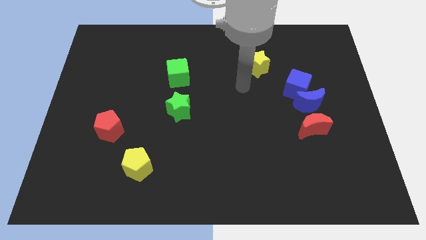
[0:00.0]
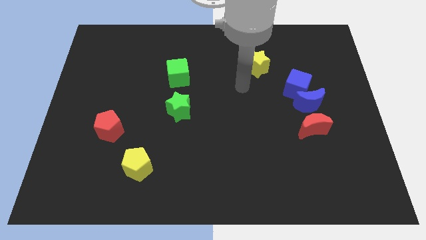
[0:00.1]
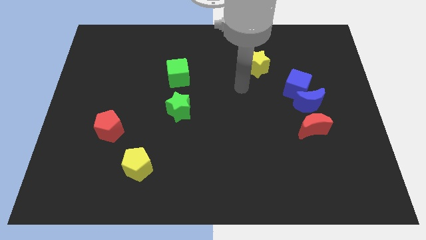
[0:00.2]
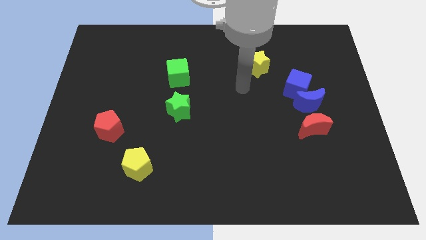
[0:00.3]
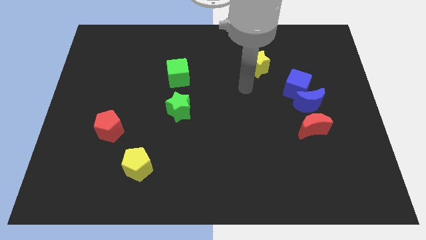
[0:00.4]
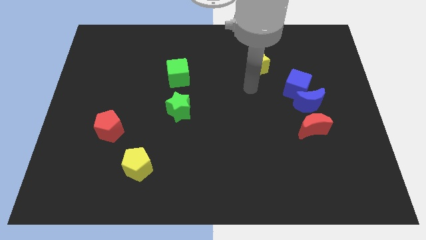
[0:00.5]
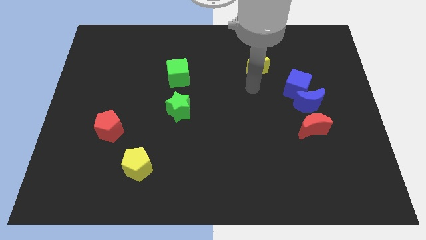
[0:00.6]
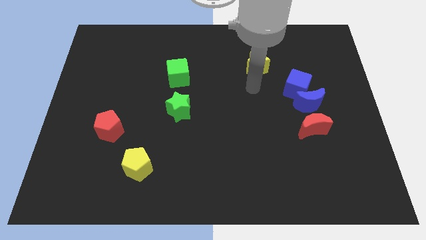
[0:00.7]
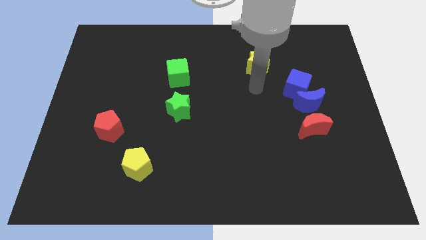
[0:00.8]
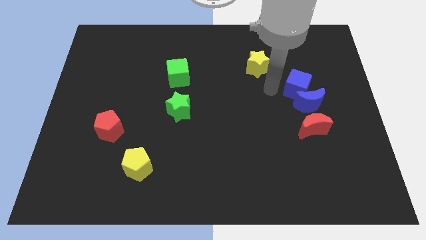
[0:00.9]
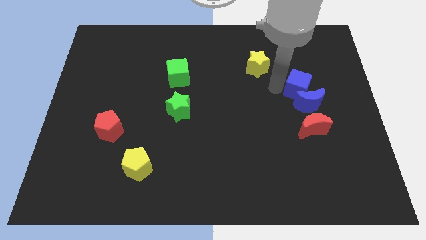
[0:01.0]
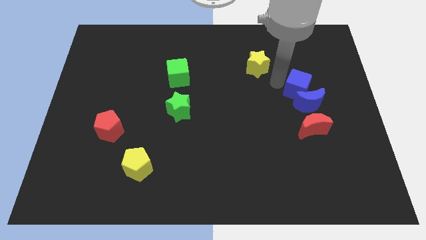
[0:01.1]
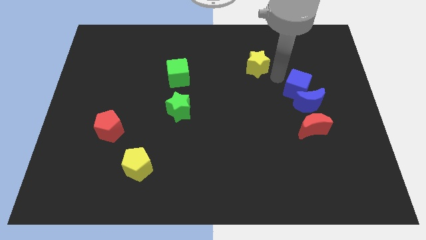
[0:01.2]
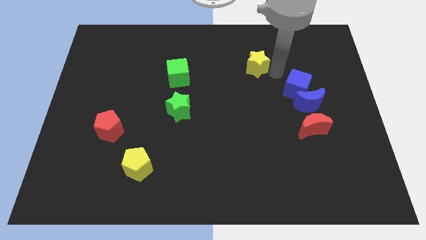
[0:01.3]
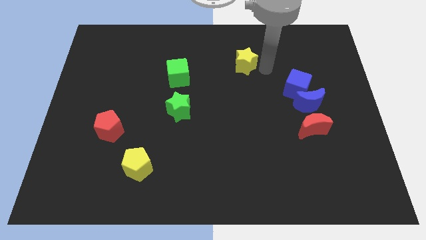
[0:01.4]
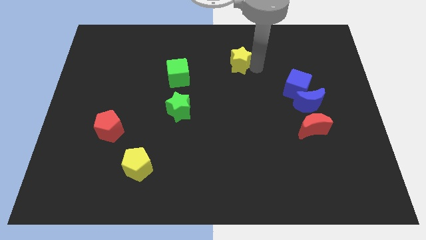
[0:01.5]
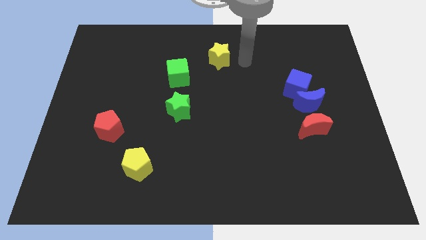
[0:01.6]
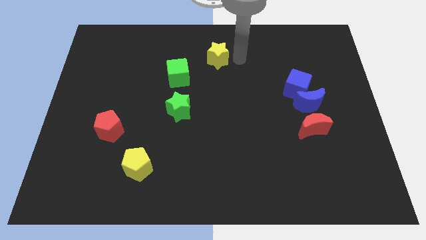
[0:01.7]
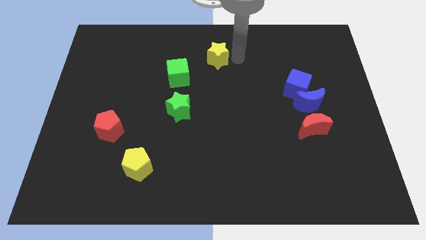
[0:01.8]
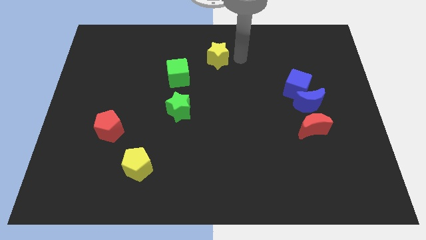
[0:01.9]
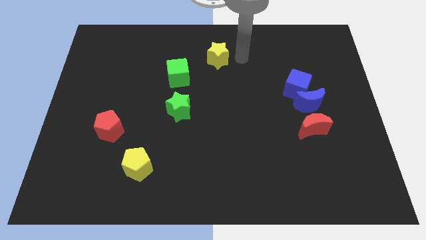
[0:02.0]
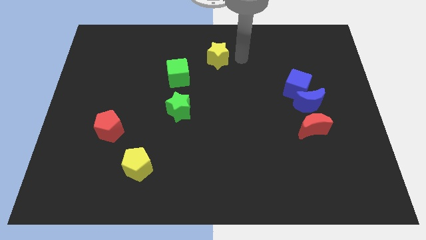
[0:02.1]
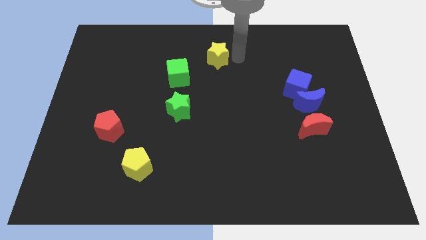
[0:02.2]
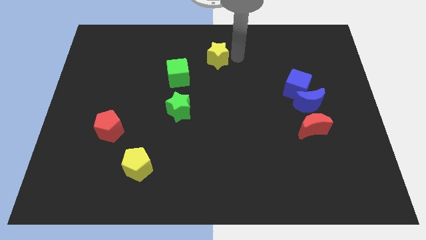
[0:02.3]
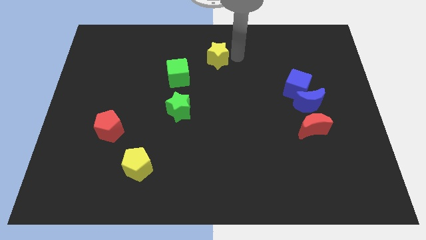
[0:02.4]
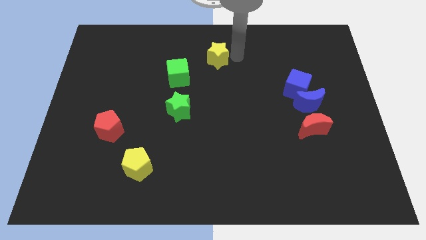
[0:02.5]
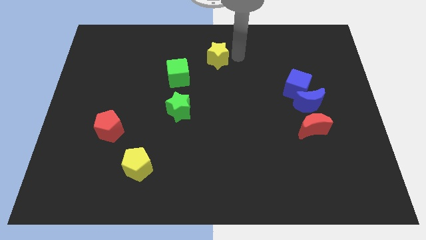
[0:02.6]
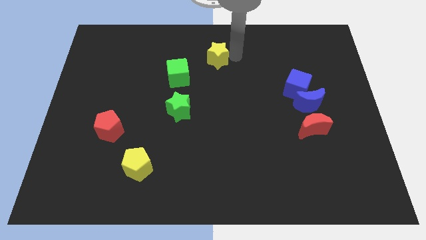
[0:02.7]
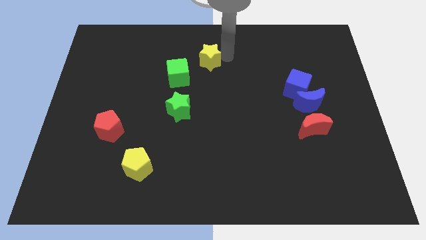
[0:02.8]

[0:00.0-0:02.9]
slide the yellow star towards the green cube

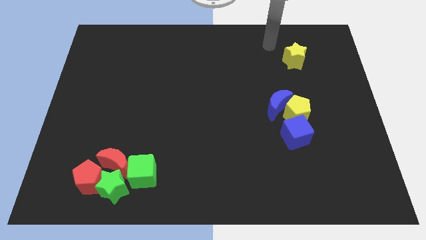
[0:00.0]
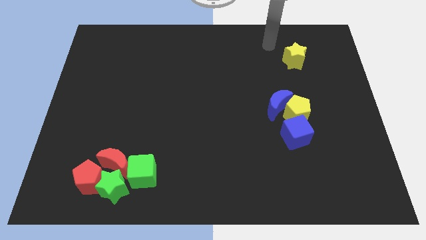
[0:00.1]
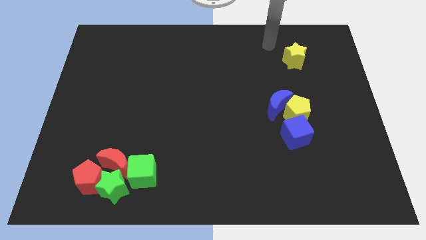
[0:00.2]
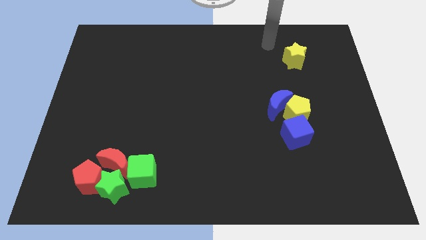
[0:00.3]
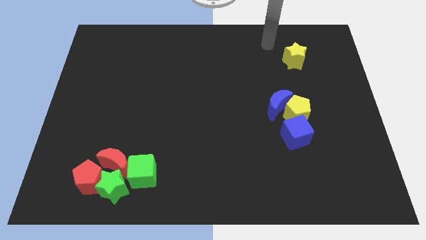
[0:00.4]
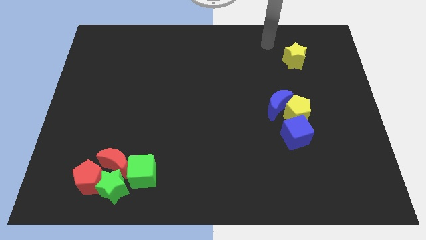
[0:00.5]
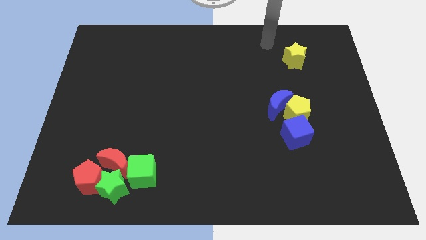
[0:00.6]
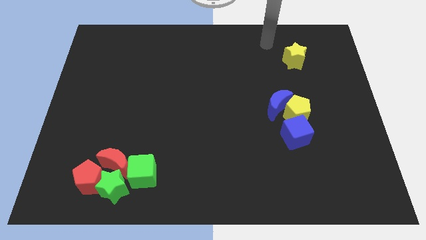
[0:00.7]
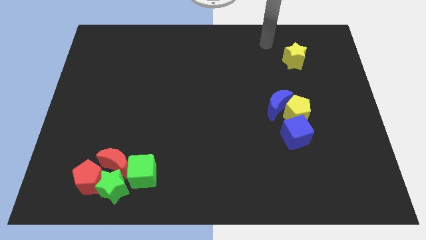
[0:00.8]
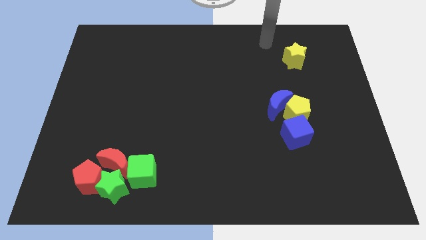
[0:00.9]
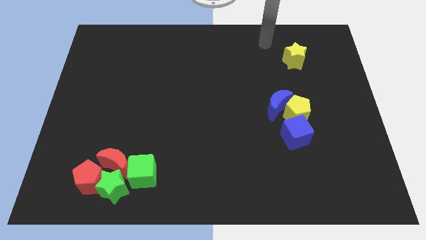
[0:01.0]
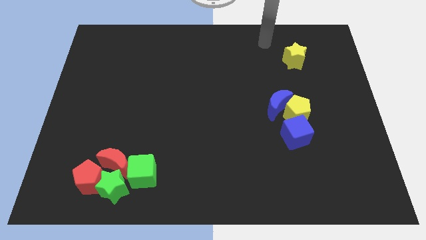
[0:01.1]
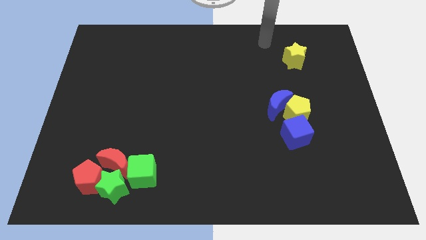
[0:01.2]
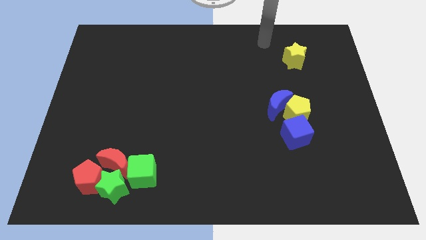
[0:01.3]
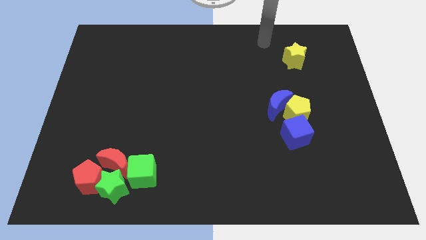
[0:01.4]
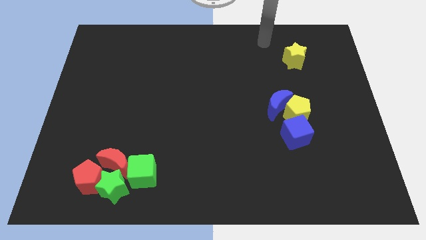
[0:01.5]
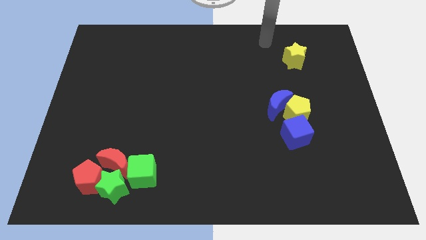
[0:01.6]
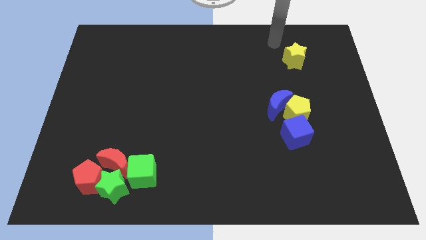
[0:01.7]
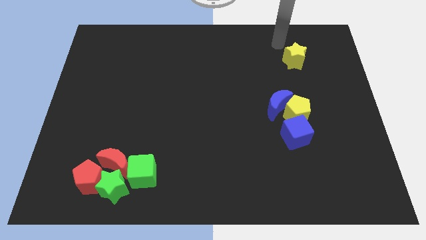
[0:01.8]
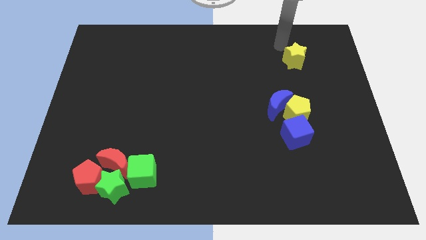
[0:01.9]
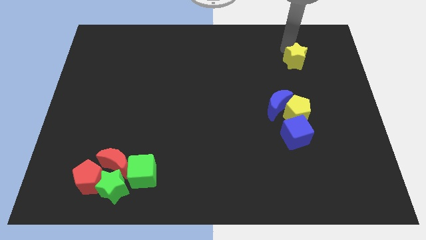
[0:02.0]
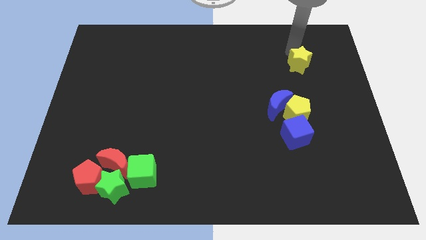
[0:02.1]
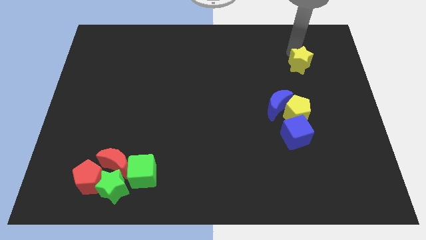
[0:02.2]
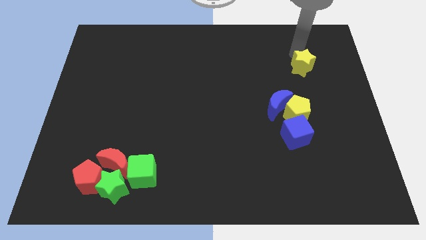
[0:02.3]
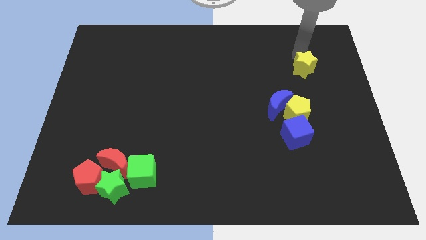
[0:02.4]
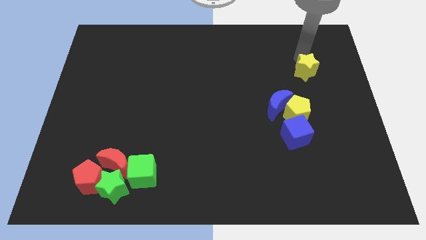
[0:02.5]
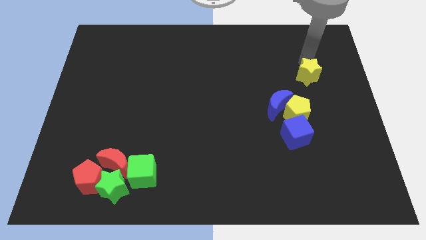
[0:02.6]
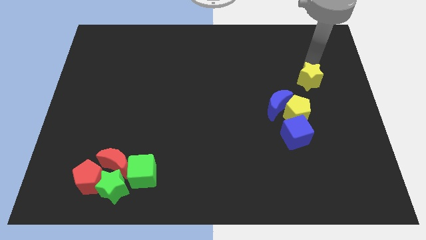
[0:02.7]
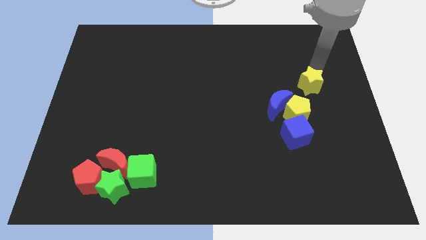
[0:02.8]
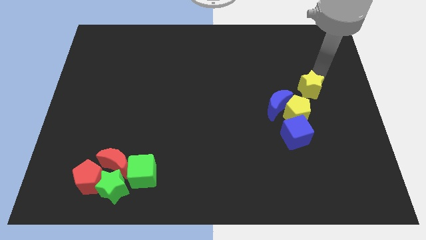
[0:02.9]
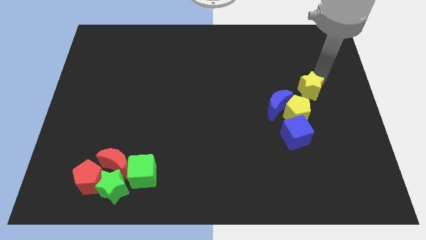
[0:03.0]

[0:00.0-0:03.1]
slide the yellow star diagonally top right to the yellow pentagon

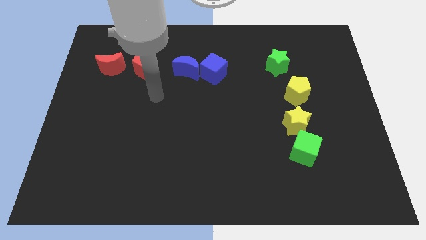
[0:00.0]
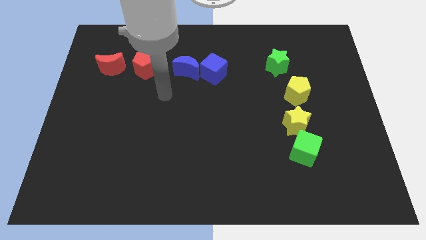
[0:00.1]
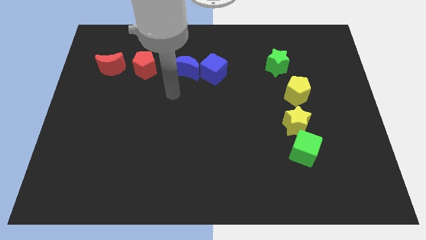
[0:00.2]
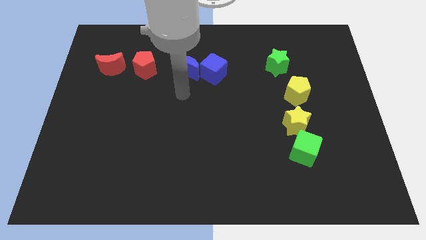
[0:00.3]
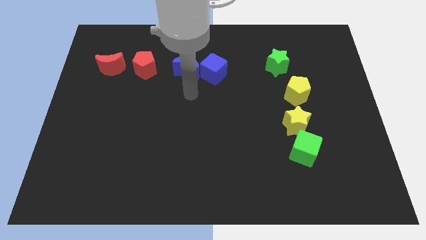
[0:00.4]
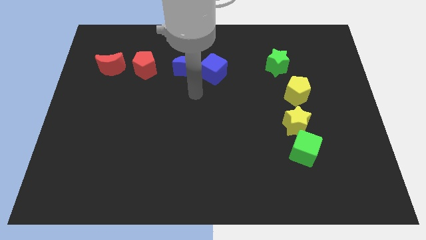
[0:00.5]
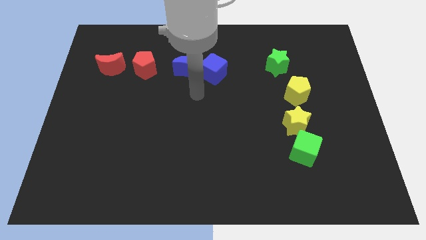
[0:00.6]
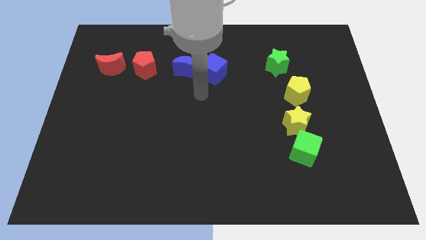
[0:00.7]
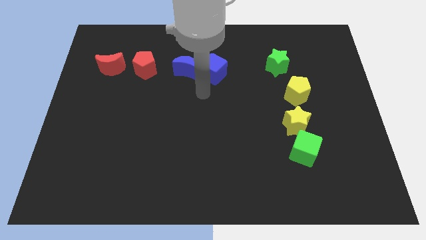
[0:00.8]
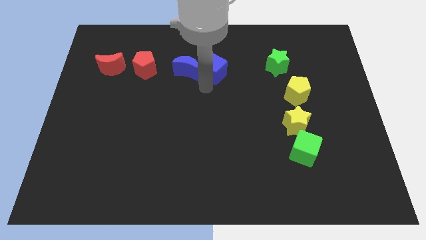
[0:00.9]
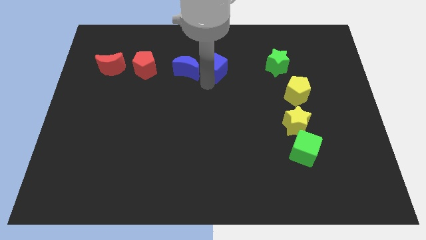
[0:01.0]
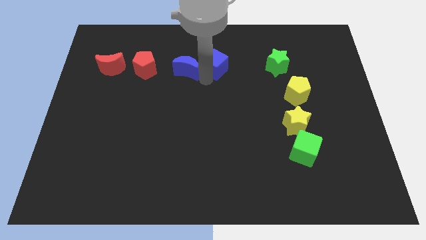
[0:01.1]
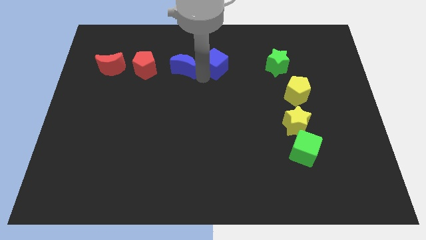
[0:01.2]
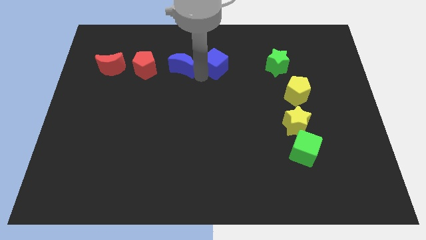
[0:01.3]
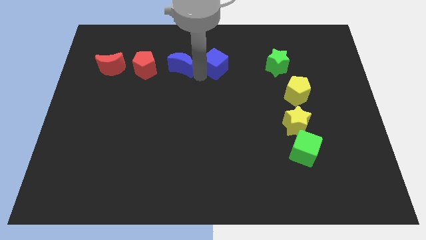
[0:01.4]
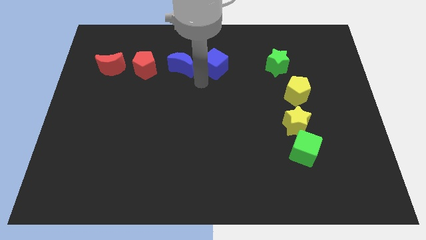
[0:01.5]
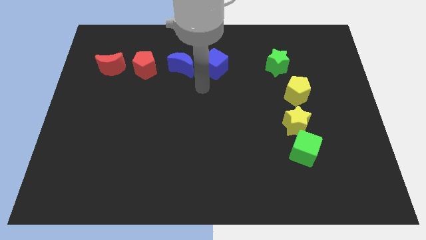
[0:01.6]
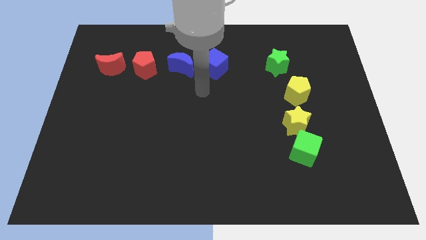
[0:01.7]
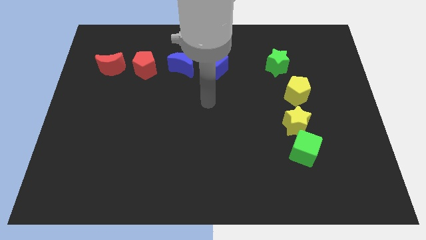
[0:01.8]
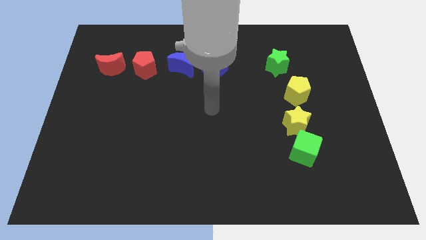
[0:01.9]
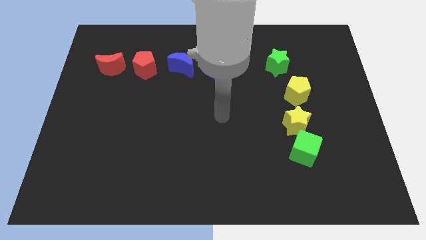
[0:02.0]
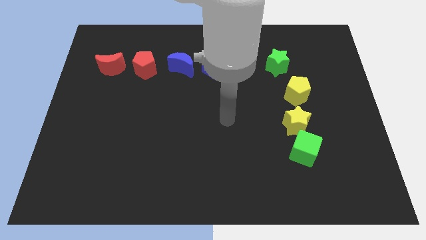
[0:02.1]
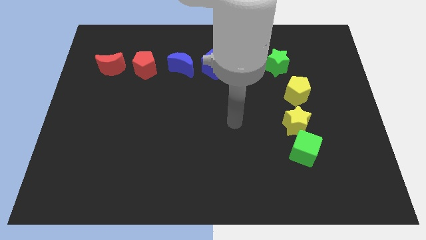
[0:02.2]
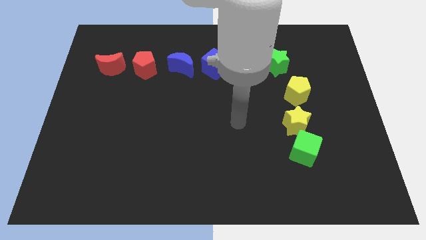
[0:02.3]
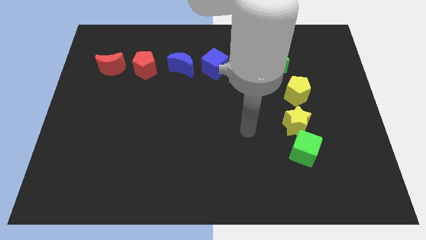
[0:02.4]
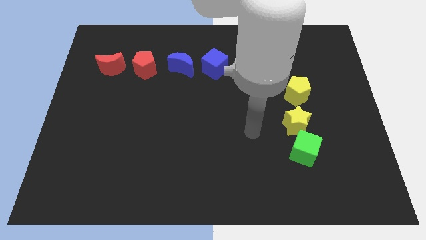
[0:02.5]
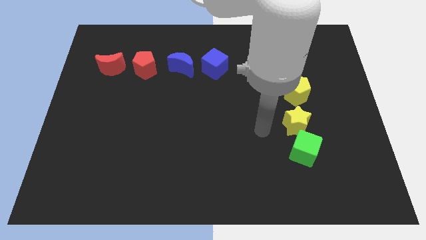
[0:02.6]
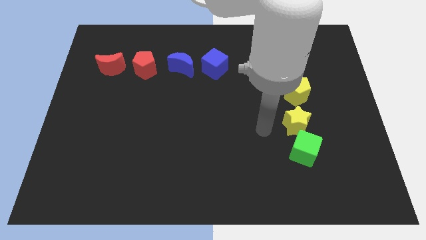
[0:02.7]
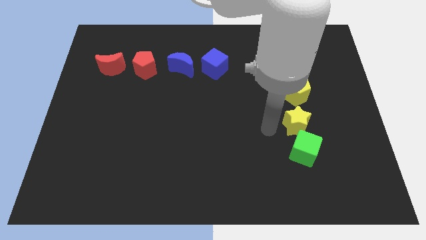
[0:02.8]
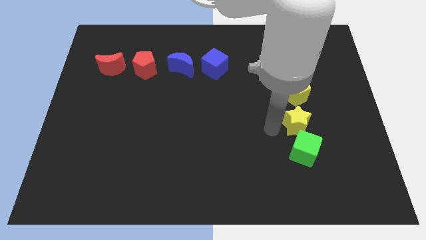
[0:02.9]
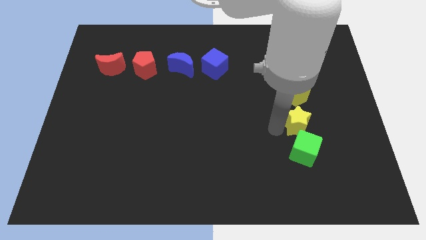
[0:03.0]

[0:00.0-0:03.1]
separate the group of blue blocks
